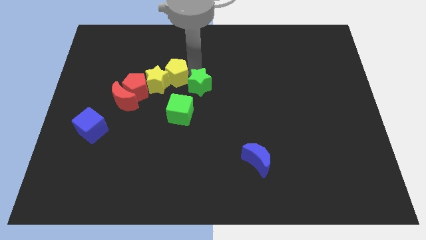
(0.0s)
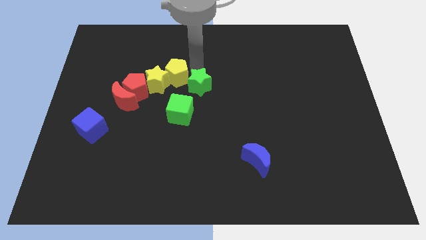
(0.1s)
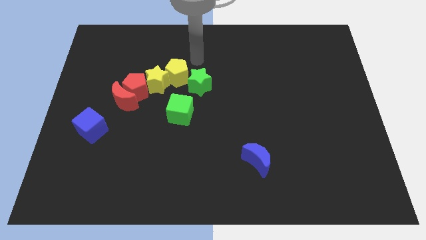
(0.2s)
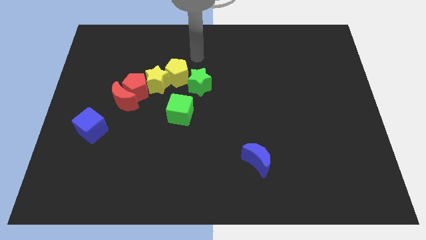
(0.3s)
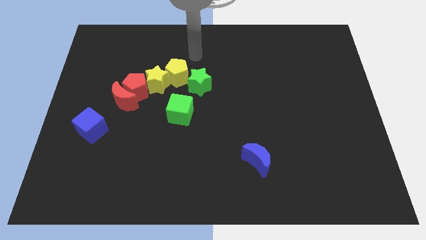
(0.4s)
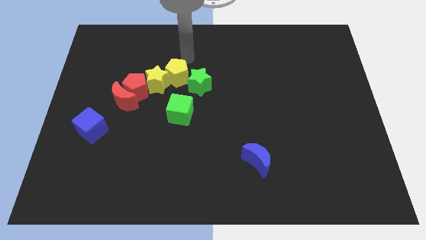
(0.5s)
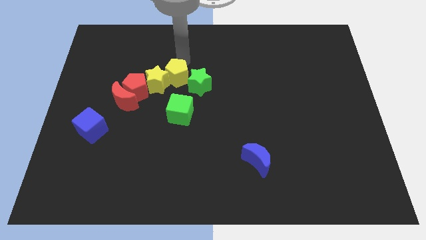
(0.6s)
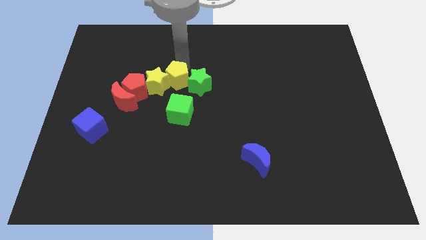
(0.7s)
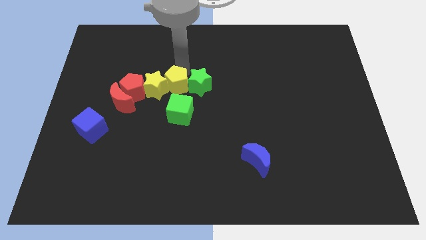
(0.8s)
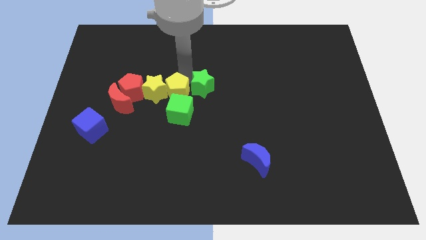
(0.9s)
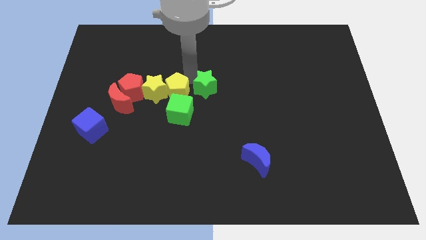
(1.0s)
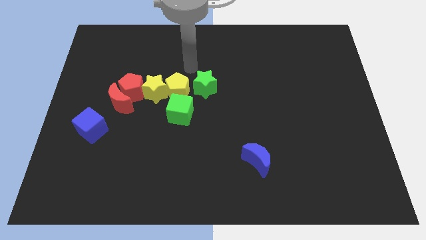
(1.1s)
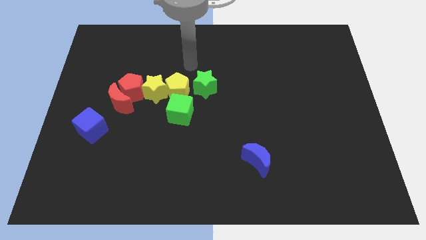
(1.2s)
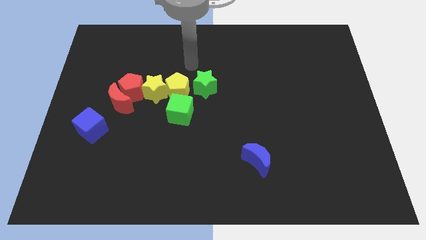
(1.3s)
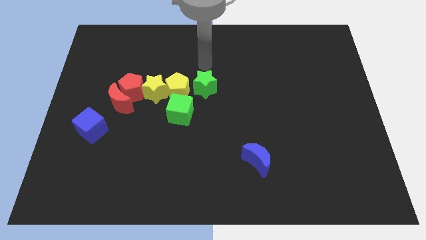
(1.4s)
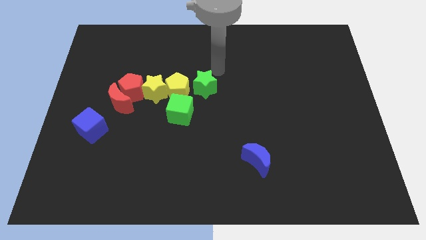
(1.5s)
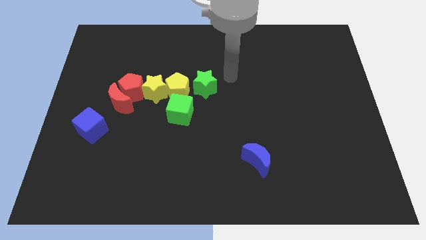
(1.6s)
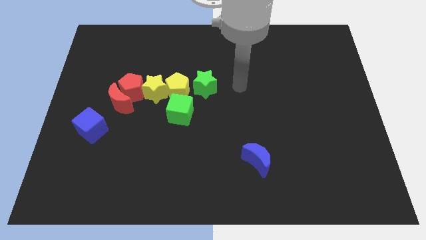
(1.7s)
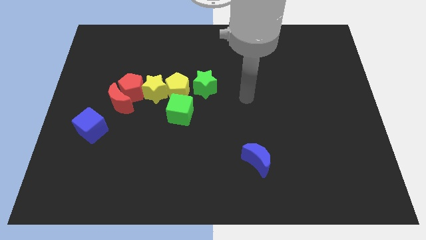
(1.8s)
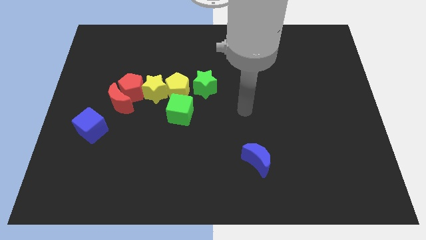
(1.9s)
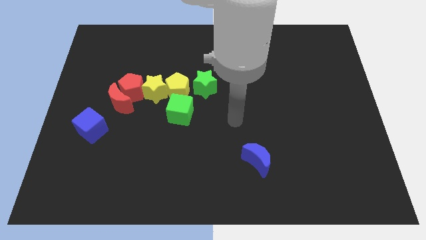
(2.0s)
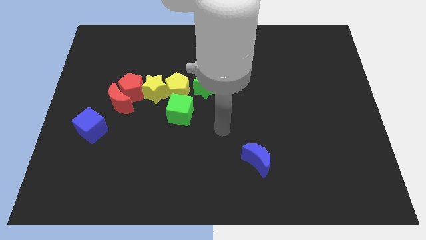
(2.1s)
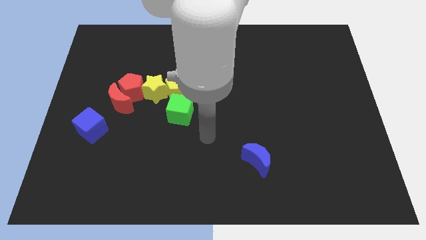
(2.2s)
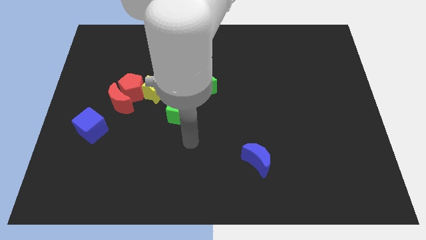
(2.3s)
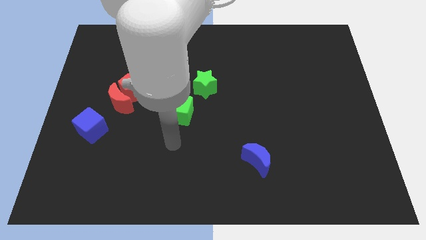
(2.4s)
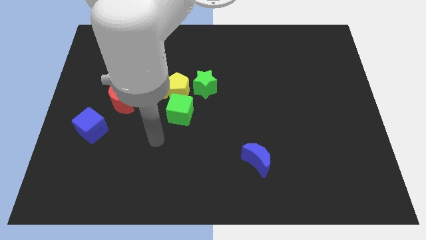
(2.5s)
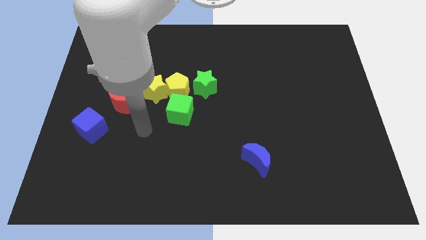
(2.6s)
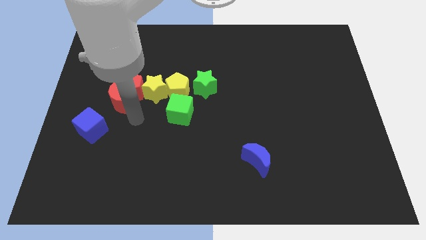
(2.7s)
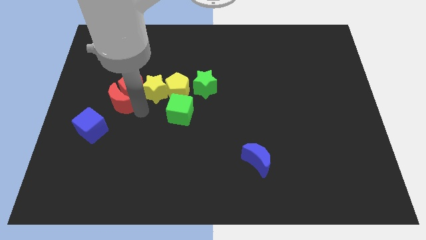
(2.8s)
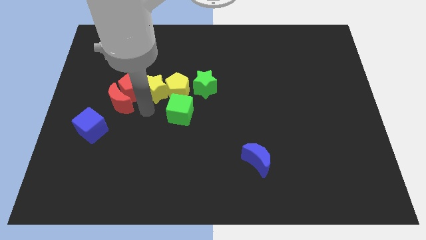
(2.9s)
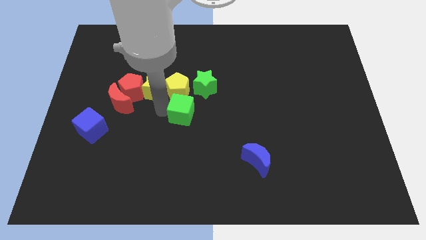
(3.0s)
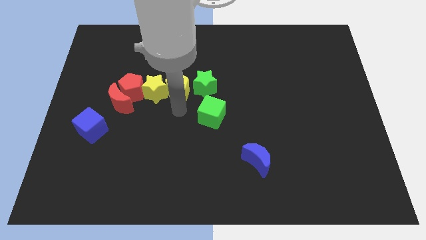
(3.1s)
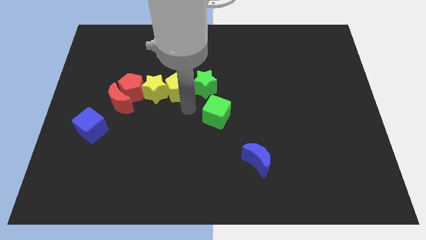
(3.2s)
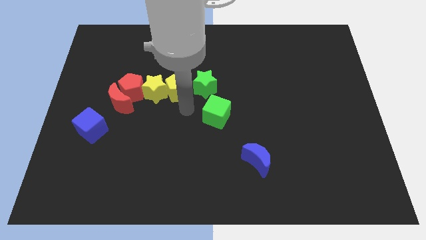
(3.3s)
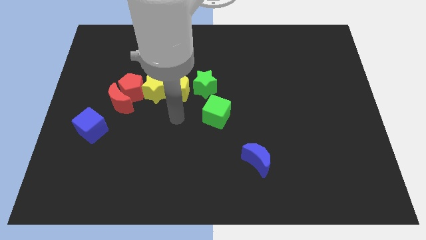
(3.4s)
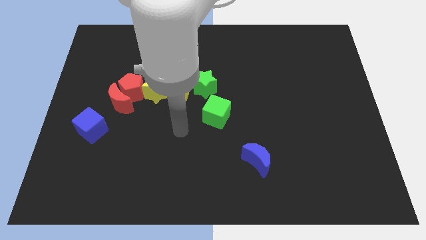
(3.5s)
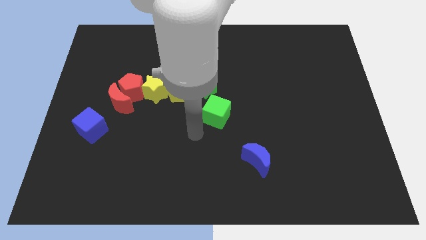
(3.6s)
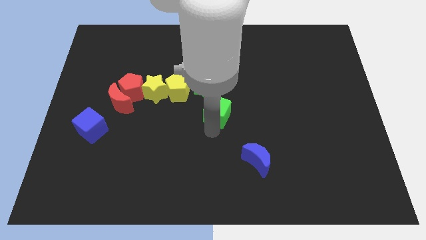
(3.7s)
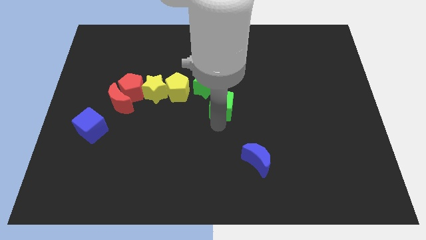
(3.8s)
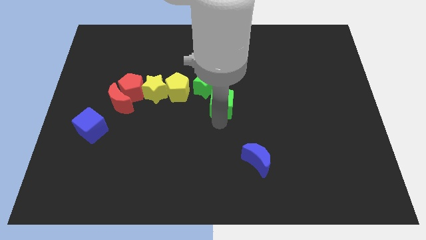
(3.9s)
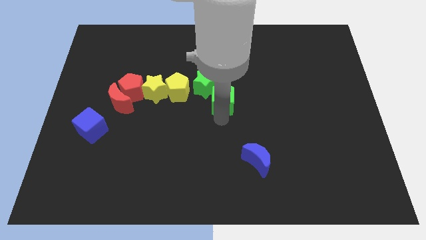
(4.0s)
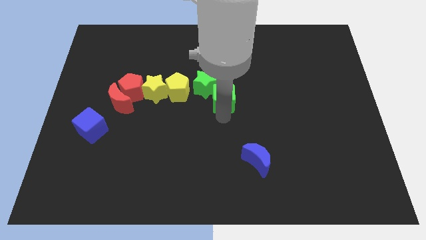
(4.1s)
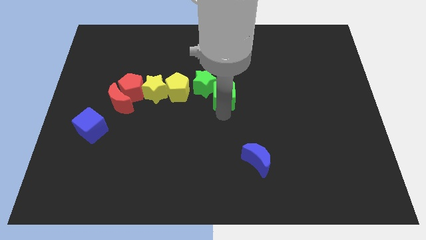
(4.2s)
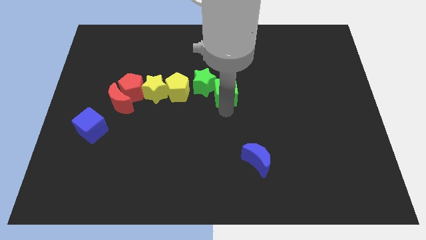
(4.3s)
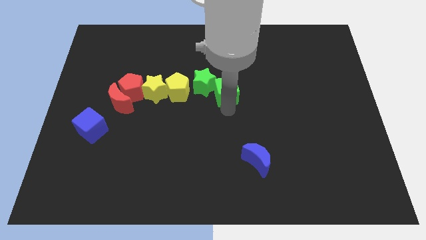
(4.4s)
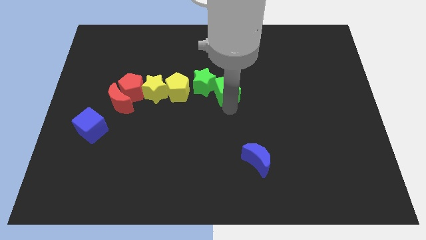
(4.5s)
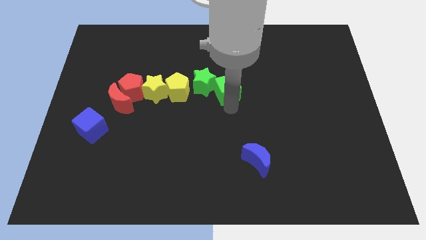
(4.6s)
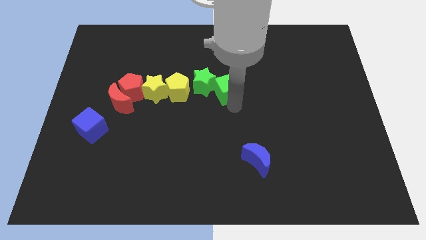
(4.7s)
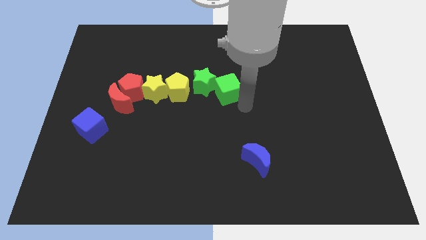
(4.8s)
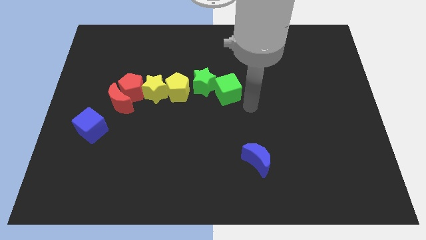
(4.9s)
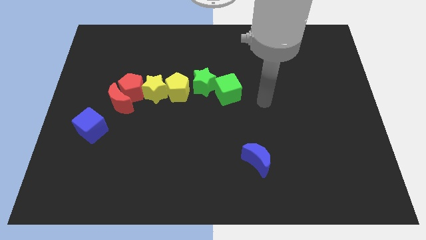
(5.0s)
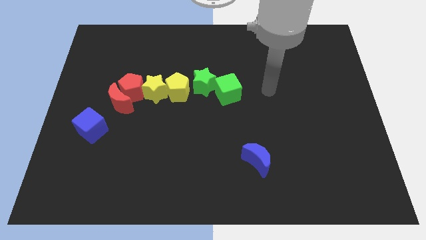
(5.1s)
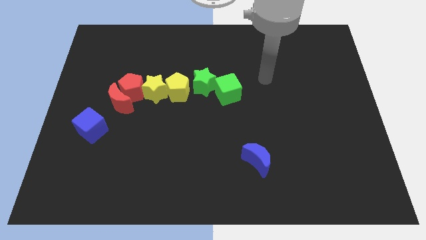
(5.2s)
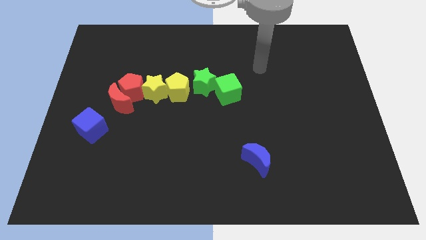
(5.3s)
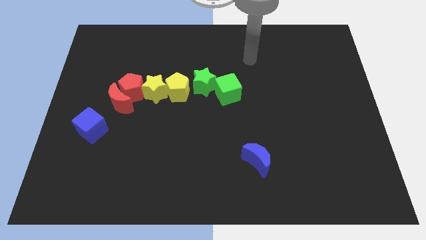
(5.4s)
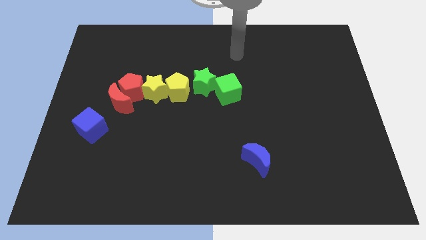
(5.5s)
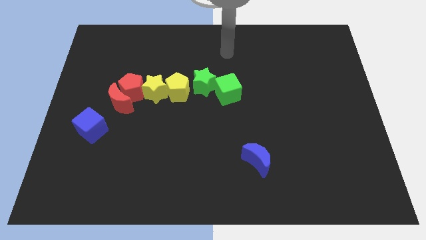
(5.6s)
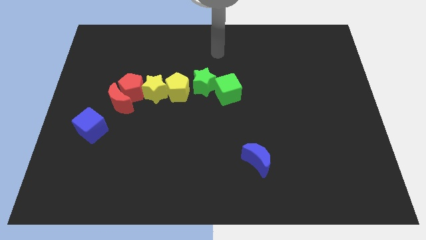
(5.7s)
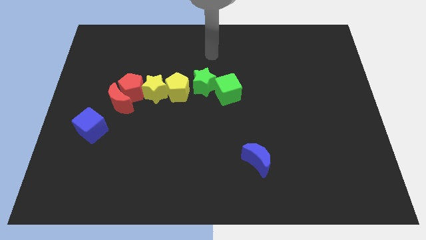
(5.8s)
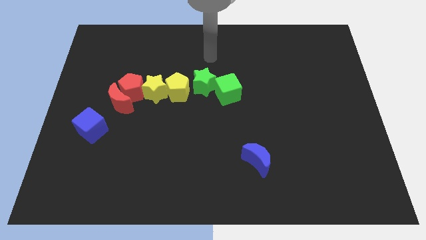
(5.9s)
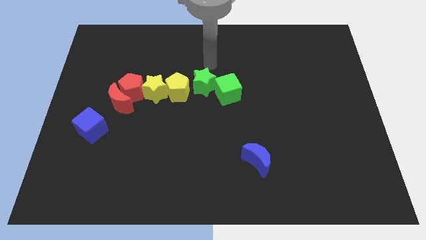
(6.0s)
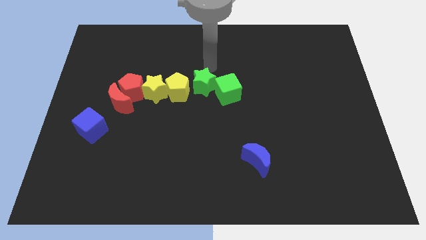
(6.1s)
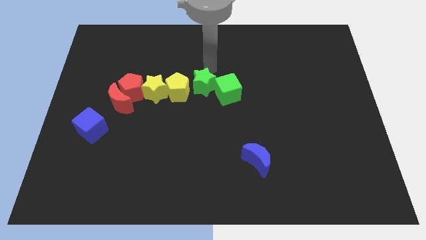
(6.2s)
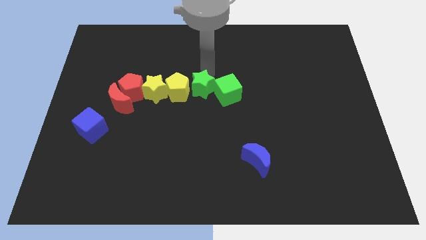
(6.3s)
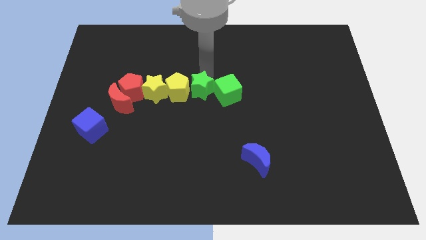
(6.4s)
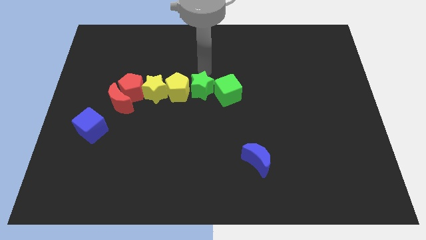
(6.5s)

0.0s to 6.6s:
make a horizontal line with the yellow blocks green blocks and red pentagon

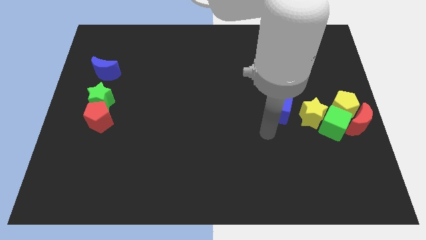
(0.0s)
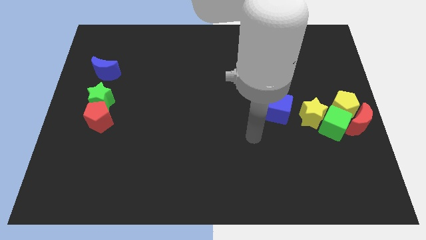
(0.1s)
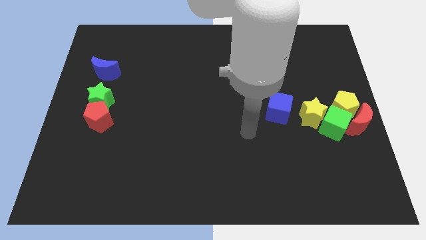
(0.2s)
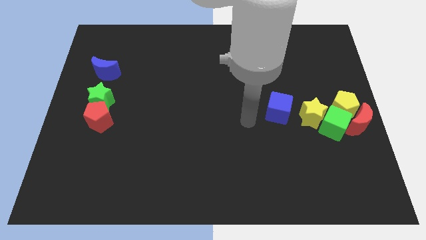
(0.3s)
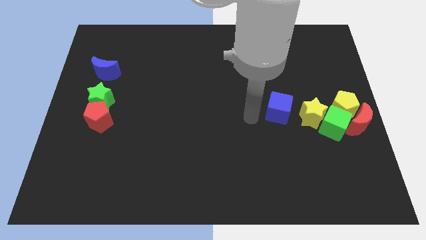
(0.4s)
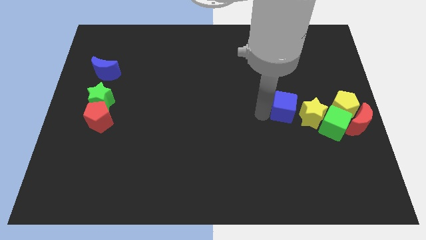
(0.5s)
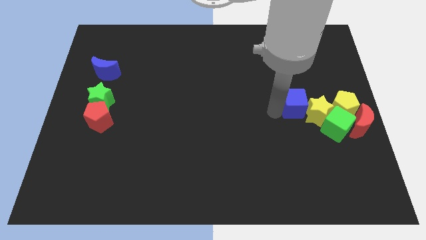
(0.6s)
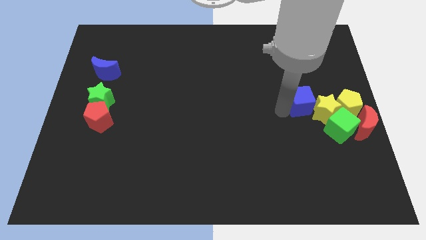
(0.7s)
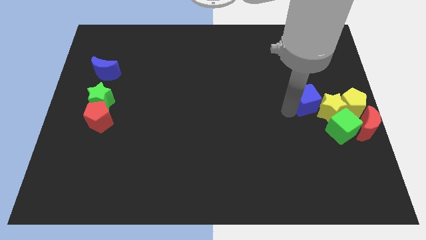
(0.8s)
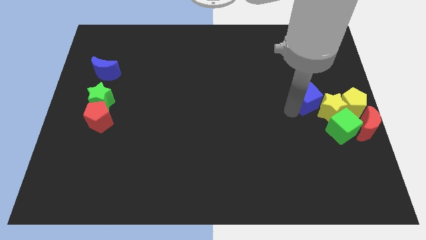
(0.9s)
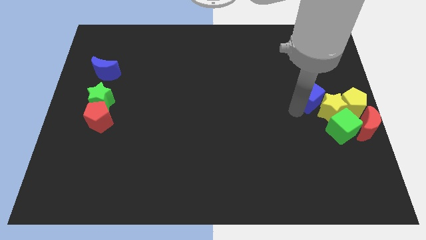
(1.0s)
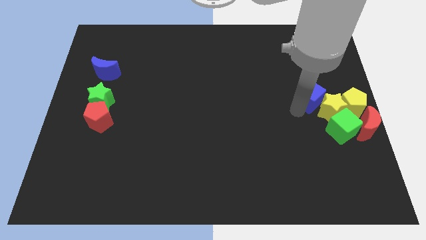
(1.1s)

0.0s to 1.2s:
move the blue cube into the yellow star

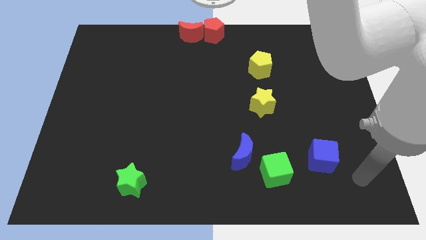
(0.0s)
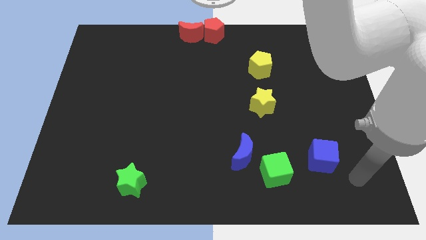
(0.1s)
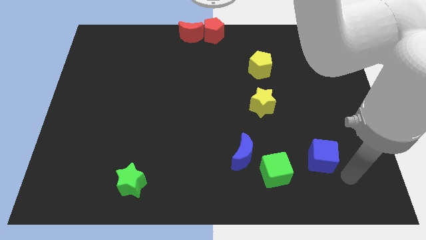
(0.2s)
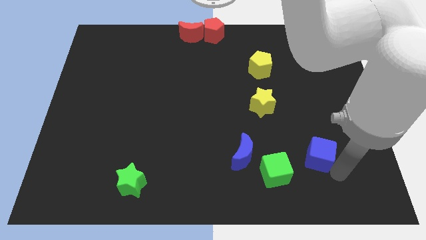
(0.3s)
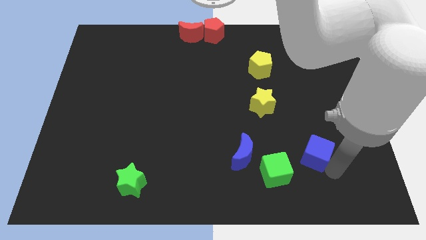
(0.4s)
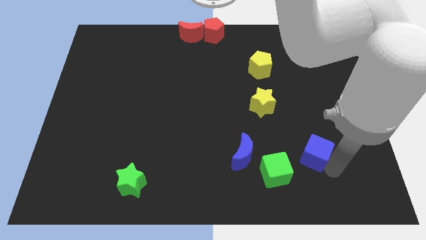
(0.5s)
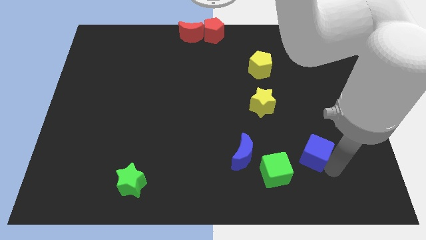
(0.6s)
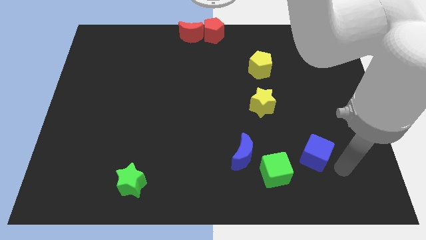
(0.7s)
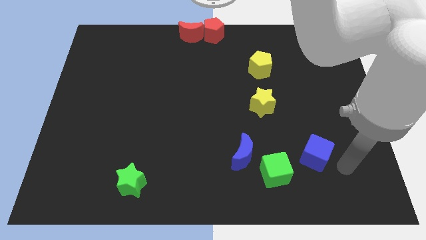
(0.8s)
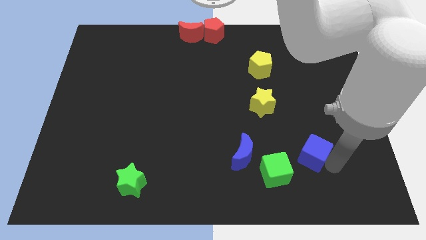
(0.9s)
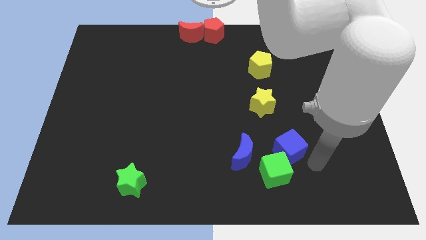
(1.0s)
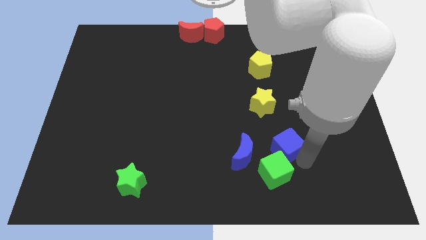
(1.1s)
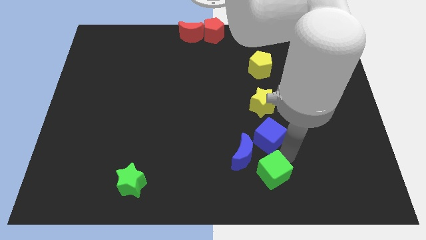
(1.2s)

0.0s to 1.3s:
move the blue cube into the green cube
